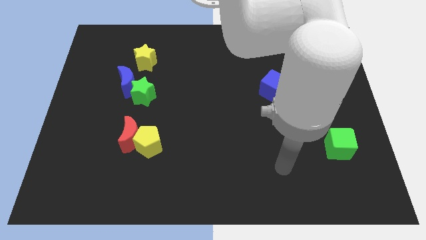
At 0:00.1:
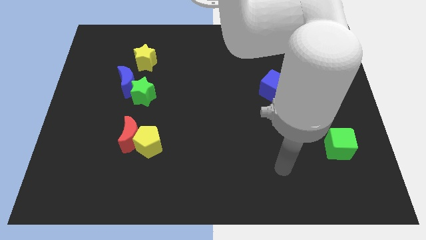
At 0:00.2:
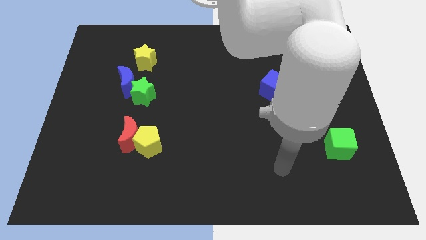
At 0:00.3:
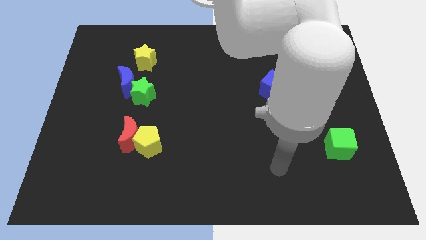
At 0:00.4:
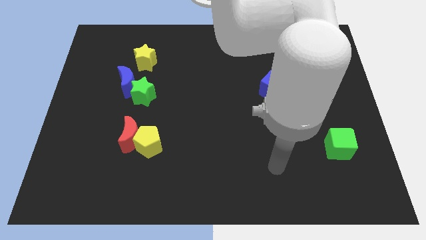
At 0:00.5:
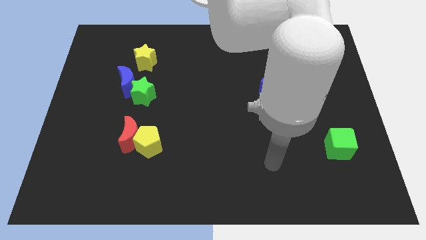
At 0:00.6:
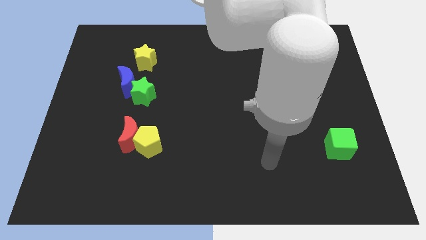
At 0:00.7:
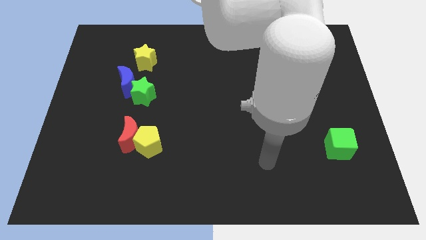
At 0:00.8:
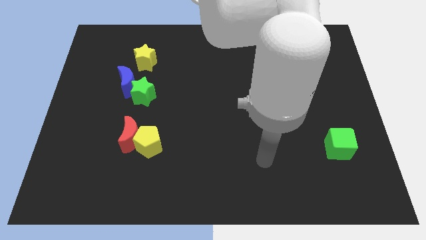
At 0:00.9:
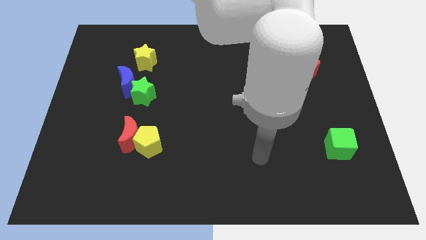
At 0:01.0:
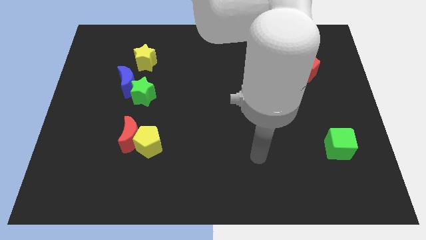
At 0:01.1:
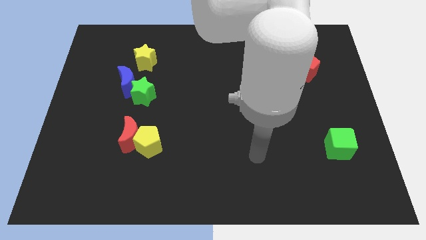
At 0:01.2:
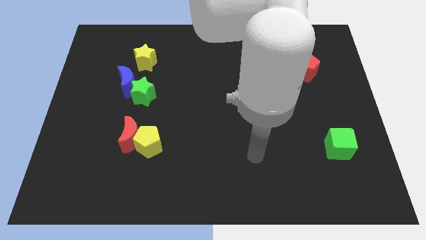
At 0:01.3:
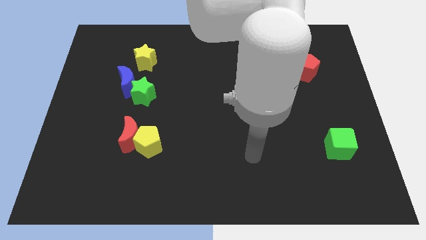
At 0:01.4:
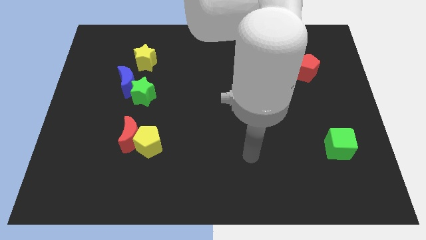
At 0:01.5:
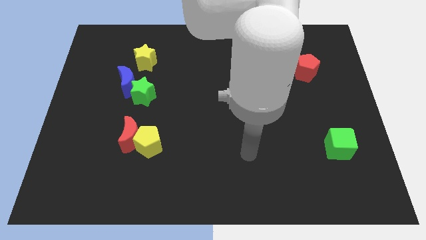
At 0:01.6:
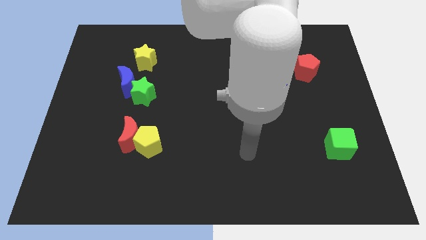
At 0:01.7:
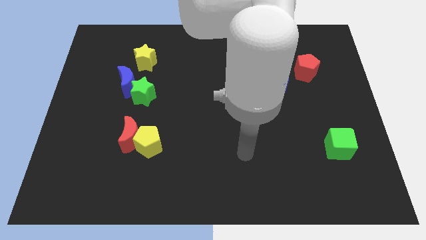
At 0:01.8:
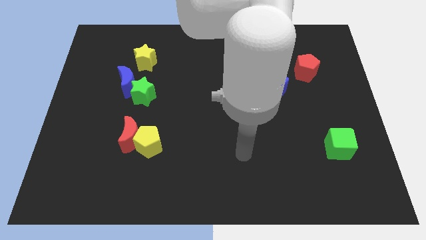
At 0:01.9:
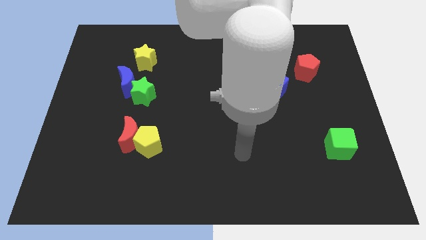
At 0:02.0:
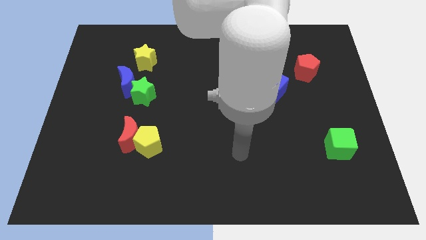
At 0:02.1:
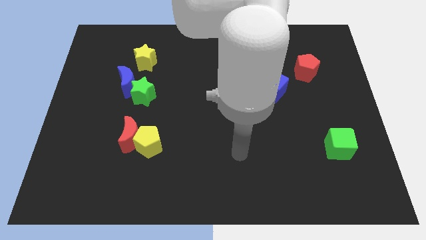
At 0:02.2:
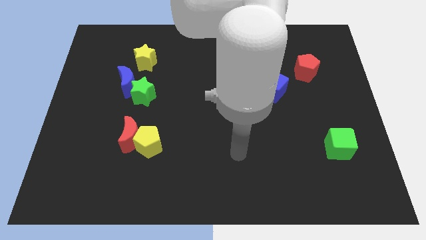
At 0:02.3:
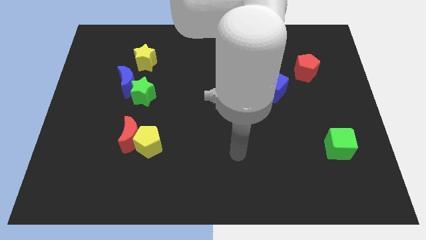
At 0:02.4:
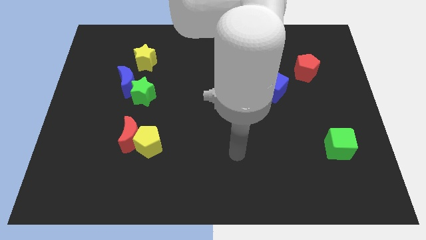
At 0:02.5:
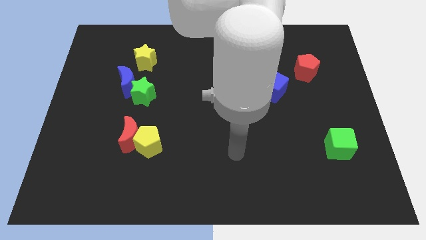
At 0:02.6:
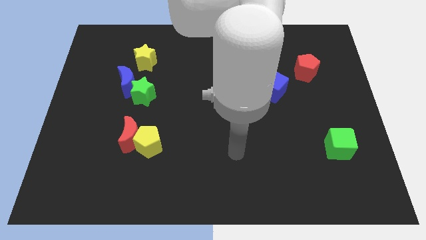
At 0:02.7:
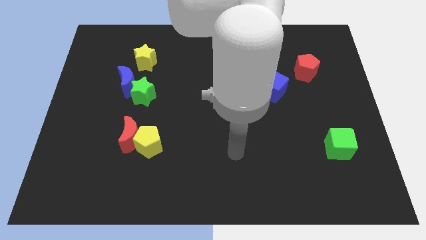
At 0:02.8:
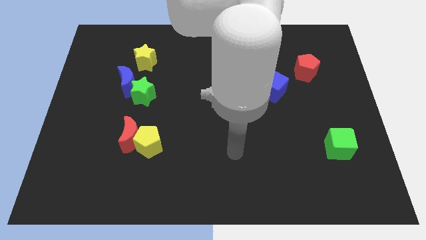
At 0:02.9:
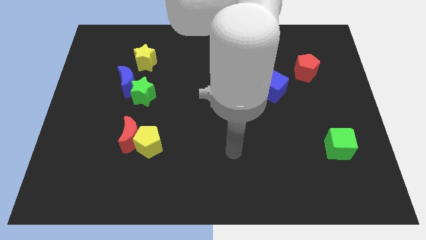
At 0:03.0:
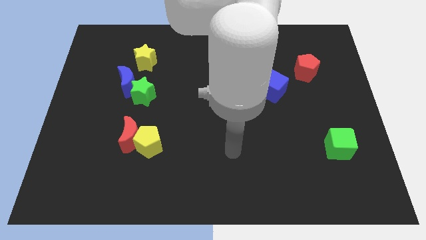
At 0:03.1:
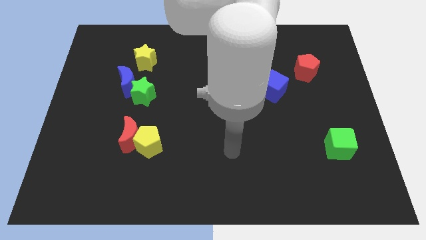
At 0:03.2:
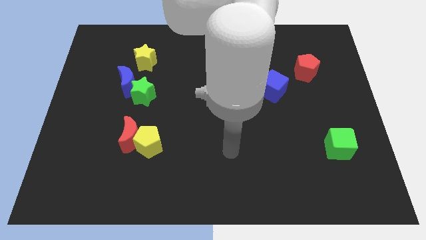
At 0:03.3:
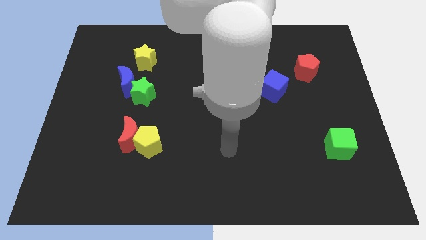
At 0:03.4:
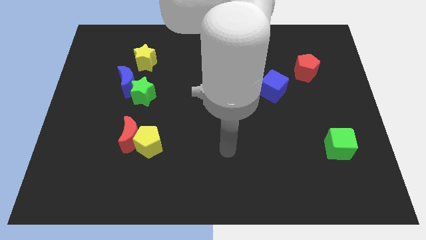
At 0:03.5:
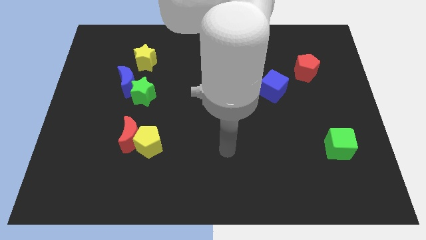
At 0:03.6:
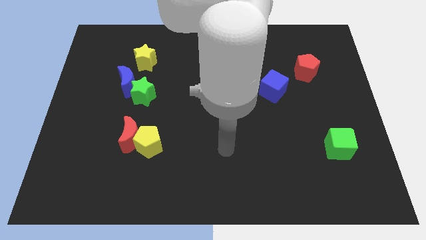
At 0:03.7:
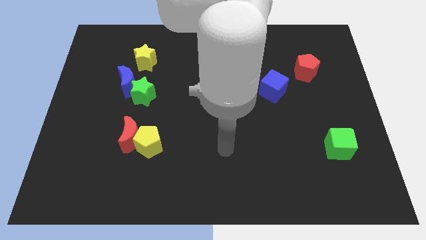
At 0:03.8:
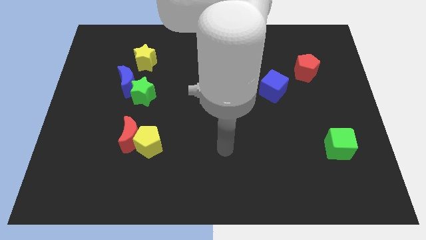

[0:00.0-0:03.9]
move your hand towards the yellow pentagon

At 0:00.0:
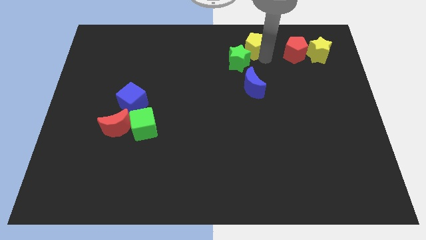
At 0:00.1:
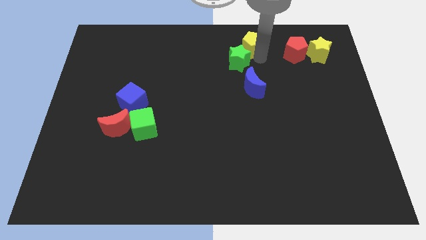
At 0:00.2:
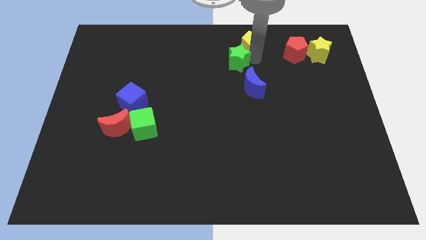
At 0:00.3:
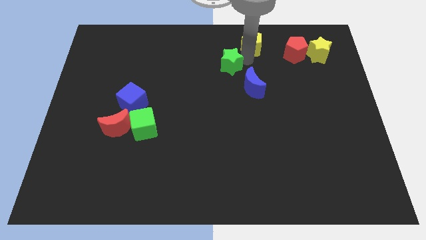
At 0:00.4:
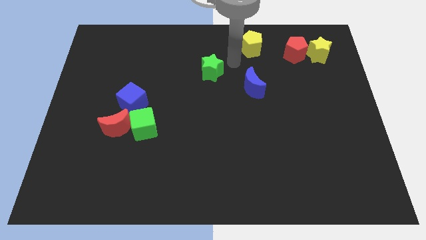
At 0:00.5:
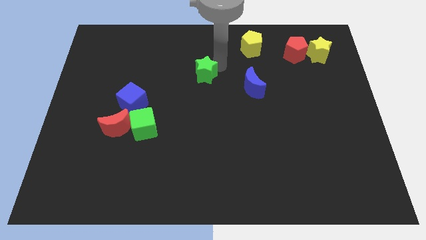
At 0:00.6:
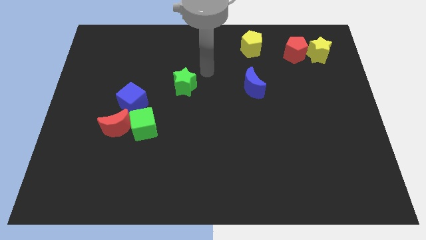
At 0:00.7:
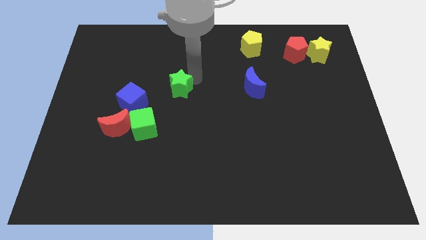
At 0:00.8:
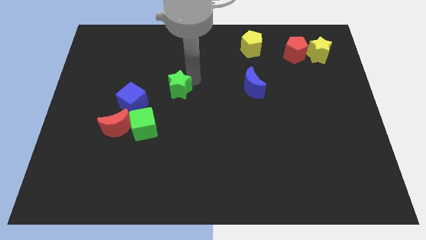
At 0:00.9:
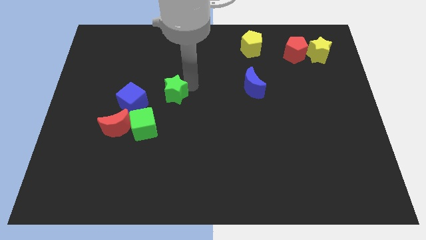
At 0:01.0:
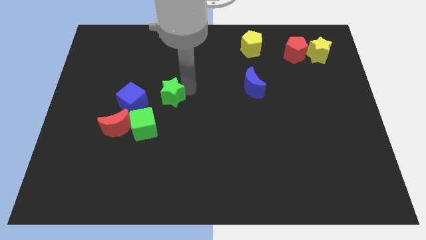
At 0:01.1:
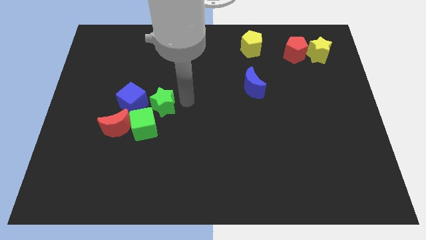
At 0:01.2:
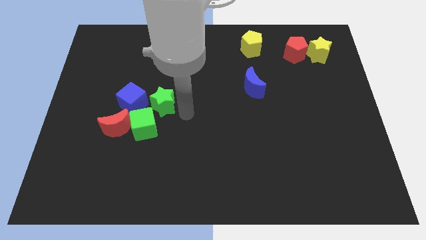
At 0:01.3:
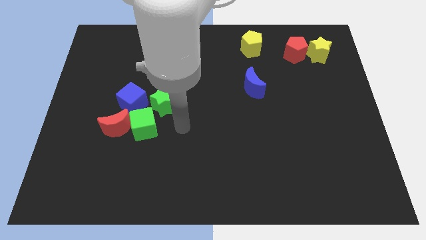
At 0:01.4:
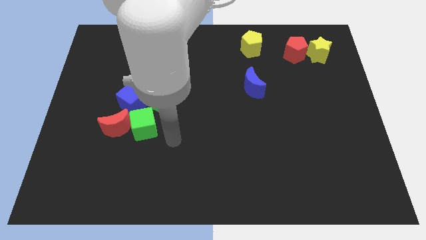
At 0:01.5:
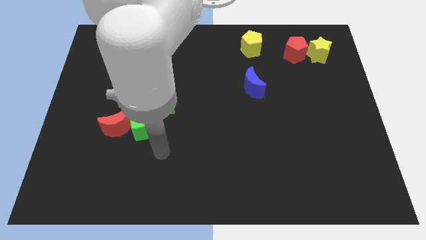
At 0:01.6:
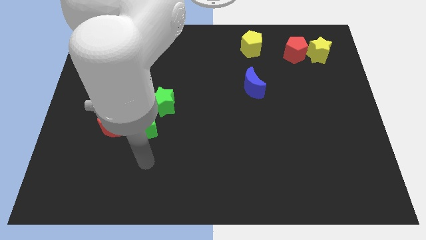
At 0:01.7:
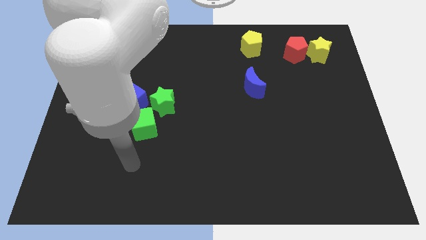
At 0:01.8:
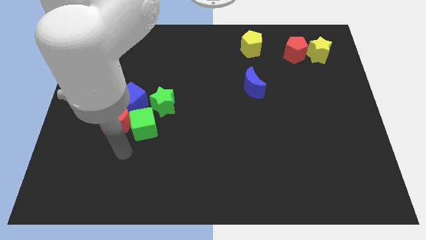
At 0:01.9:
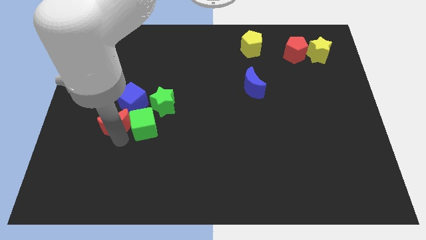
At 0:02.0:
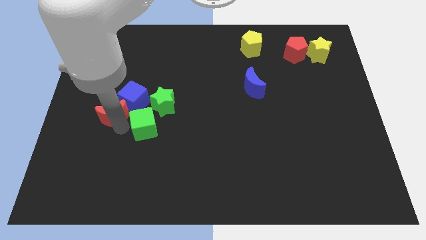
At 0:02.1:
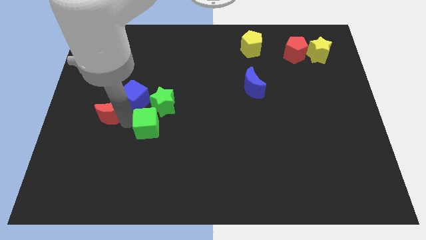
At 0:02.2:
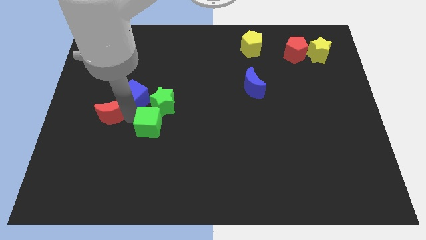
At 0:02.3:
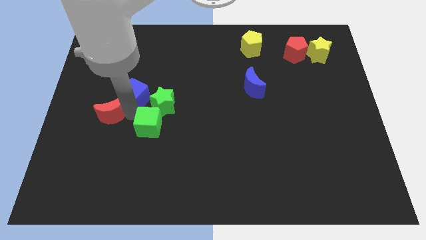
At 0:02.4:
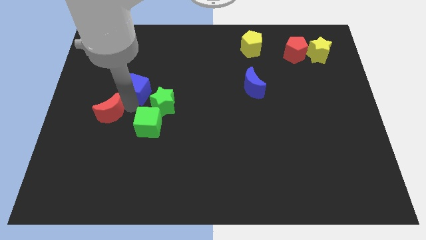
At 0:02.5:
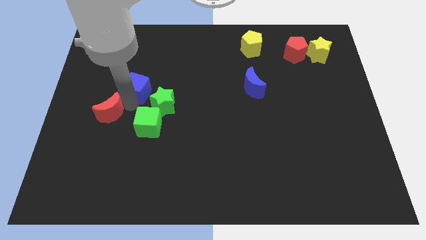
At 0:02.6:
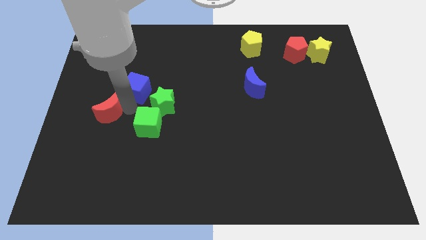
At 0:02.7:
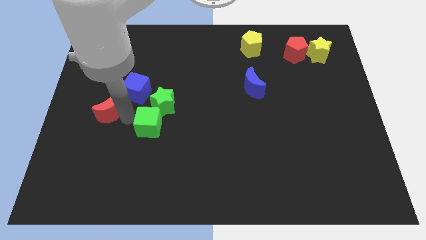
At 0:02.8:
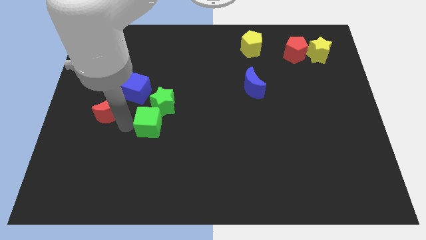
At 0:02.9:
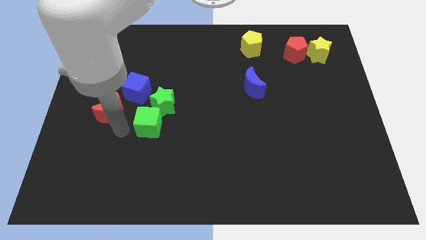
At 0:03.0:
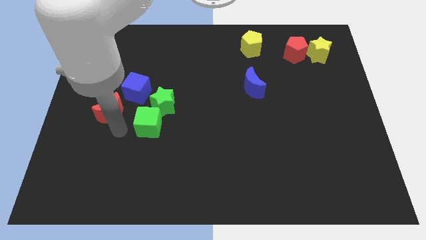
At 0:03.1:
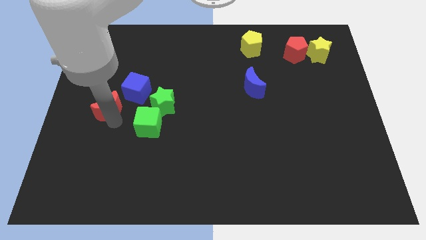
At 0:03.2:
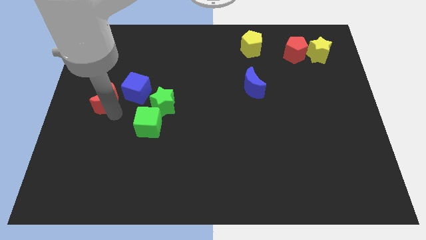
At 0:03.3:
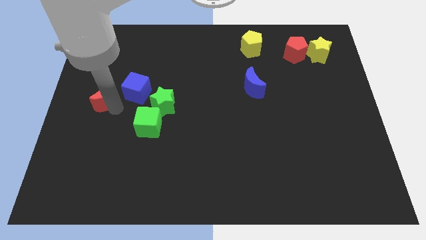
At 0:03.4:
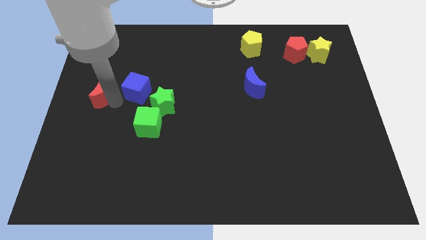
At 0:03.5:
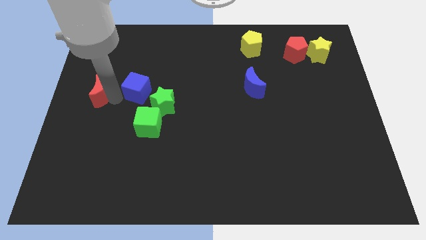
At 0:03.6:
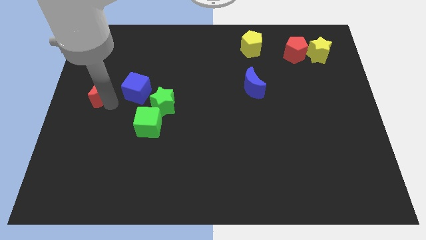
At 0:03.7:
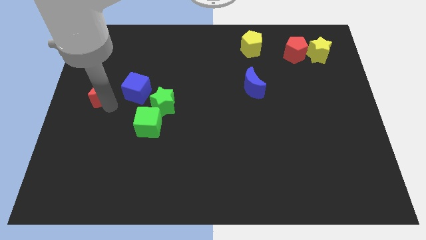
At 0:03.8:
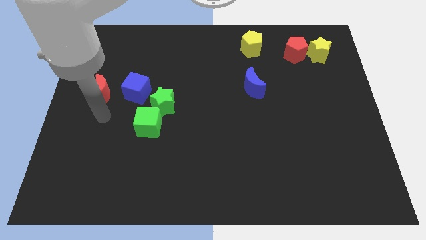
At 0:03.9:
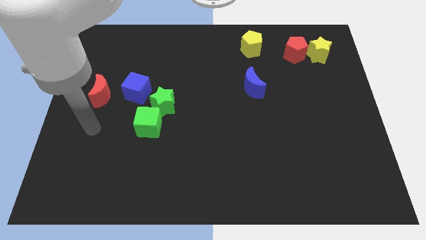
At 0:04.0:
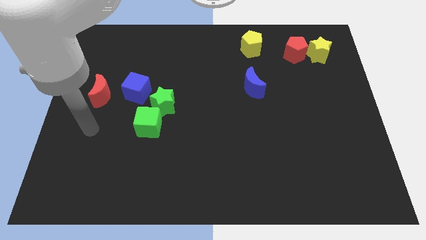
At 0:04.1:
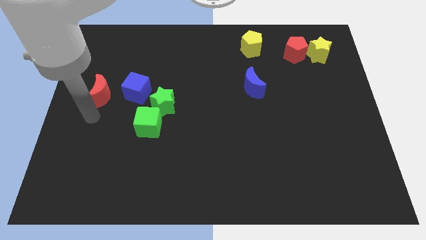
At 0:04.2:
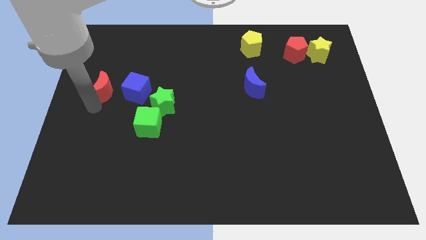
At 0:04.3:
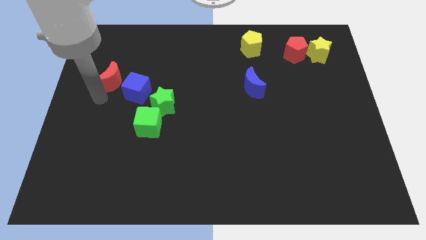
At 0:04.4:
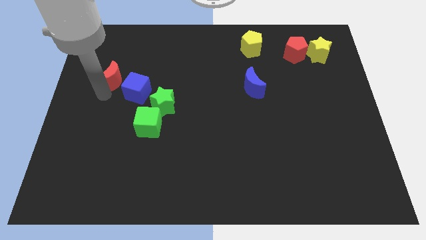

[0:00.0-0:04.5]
push red moon to the left of blue cube

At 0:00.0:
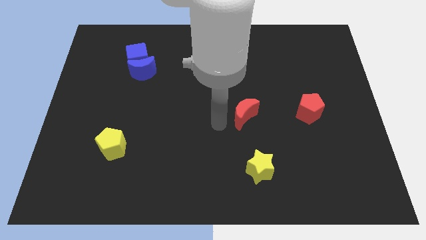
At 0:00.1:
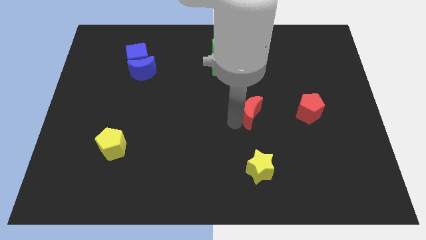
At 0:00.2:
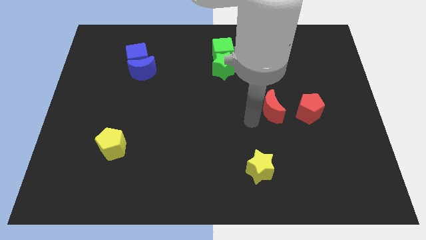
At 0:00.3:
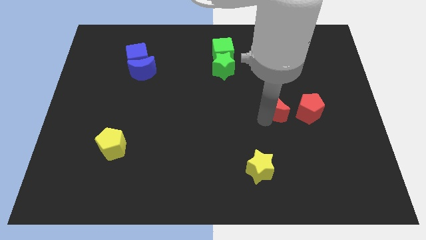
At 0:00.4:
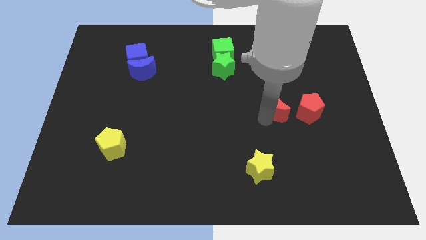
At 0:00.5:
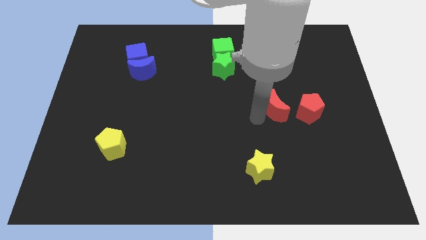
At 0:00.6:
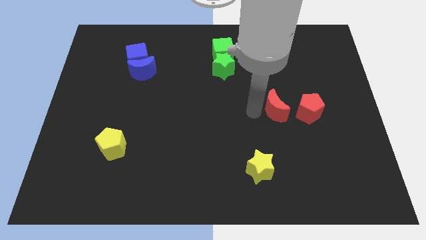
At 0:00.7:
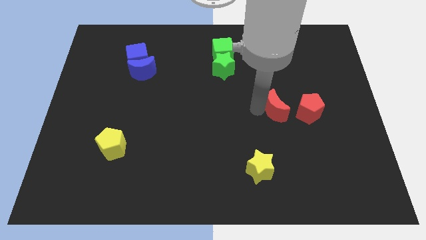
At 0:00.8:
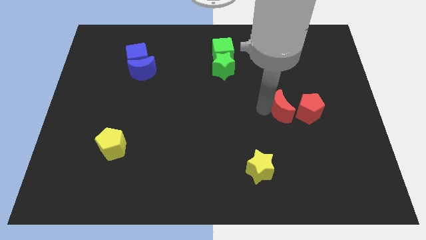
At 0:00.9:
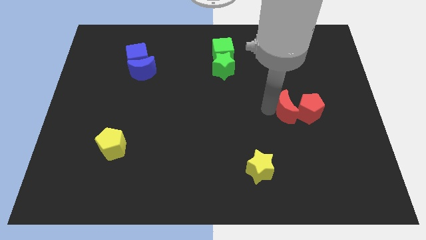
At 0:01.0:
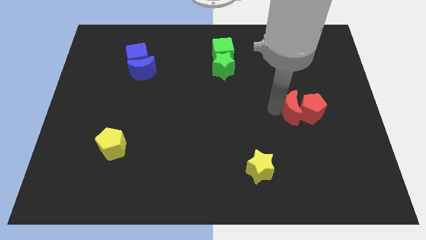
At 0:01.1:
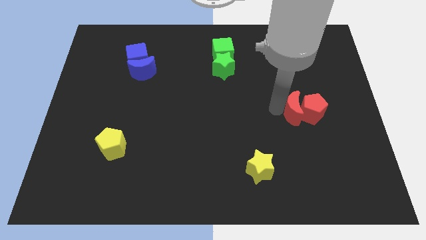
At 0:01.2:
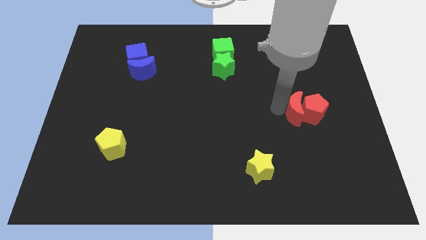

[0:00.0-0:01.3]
push the red crescent into the red pentagon
